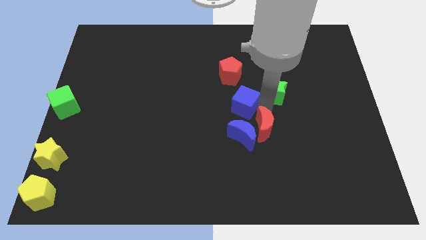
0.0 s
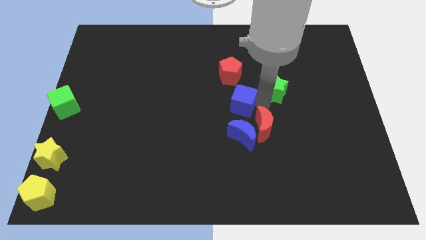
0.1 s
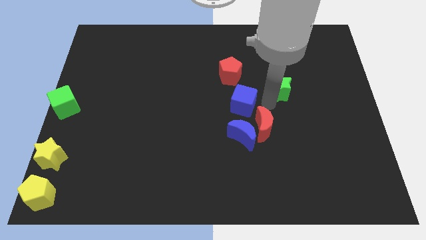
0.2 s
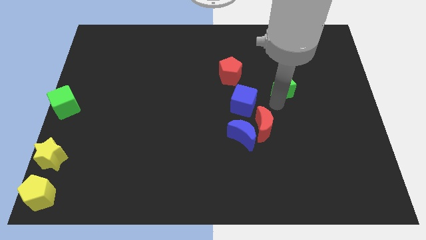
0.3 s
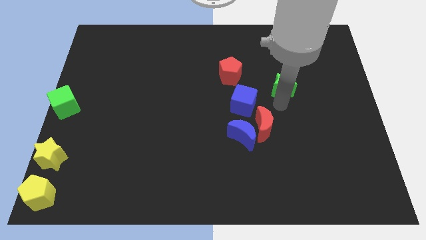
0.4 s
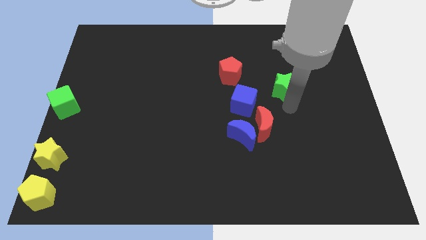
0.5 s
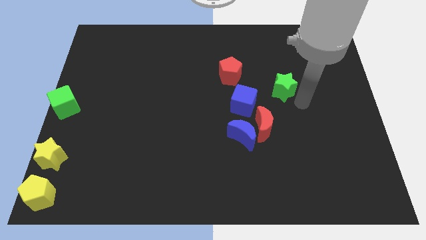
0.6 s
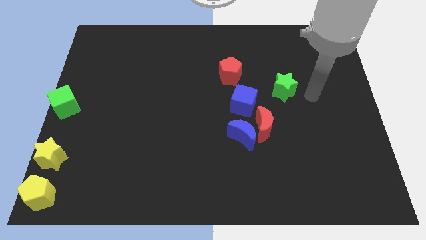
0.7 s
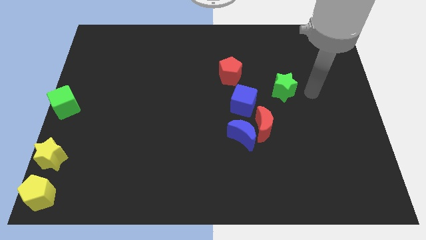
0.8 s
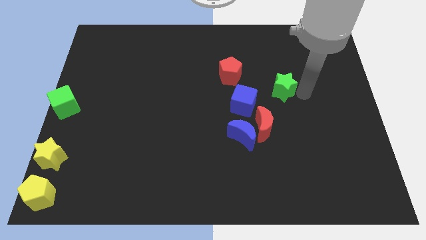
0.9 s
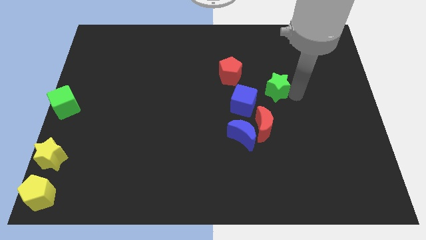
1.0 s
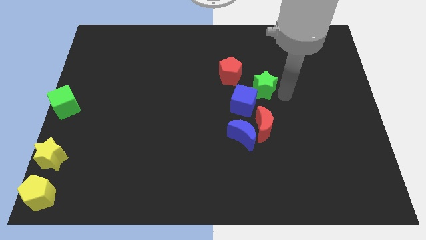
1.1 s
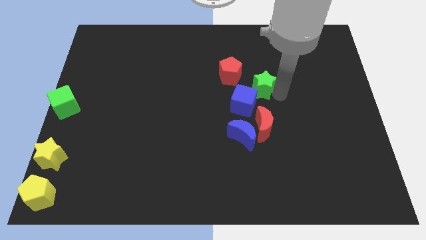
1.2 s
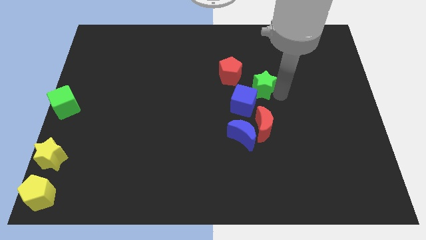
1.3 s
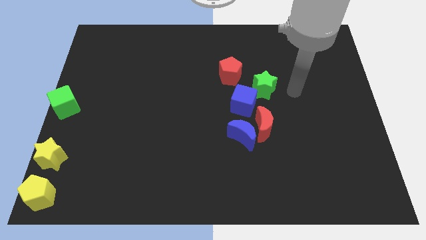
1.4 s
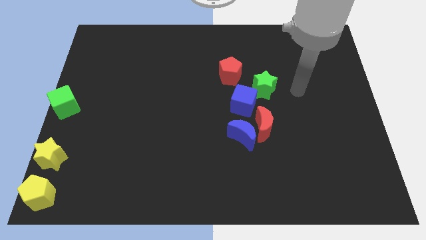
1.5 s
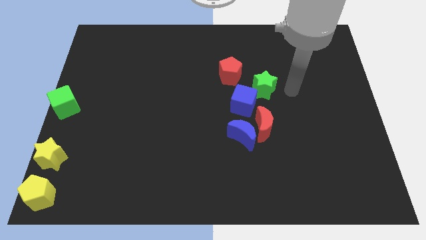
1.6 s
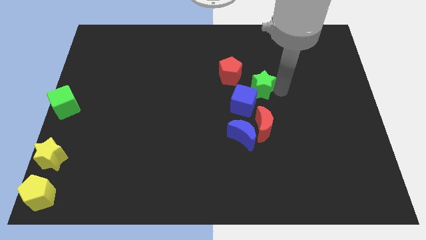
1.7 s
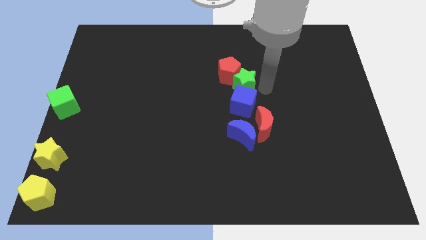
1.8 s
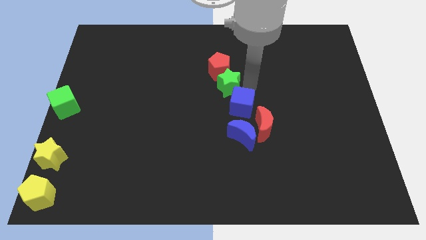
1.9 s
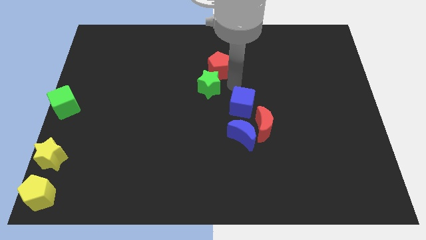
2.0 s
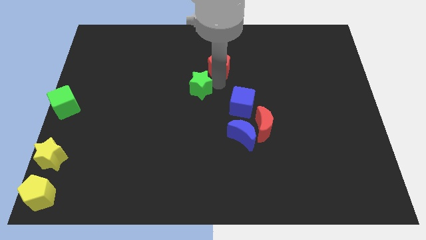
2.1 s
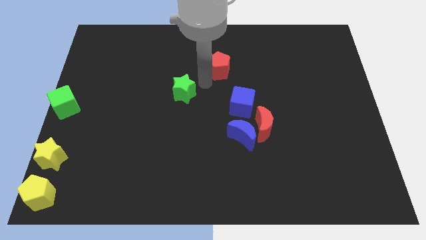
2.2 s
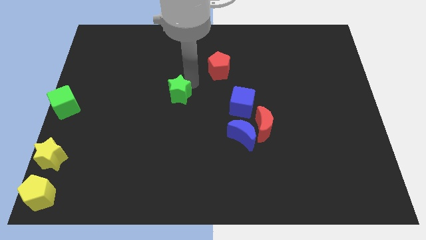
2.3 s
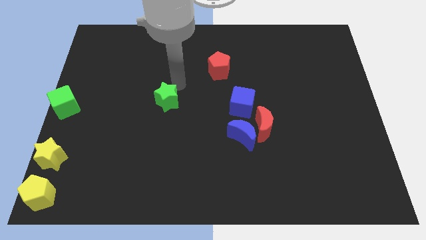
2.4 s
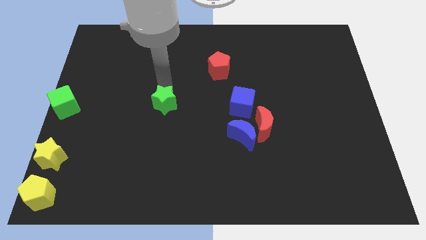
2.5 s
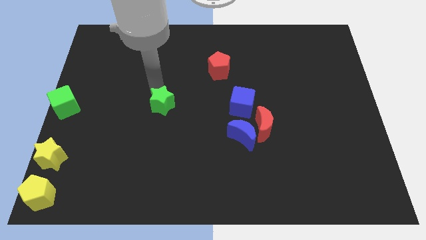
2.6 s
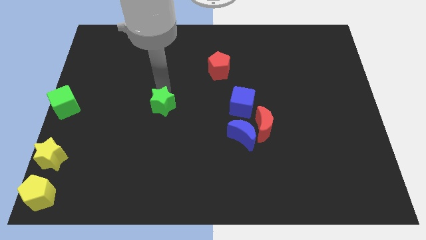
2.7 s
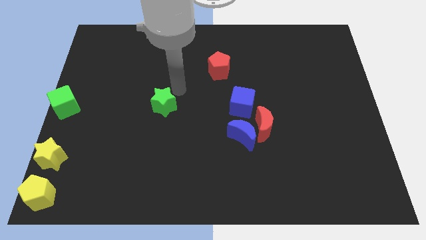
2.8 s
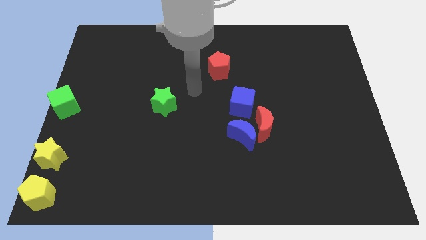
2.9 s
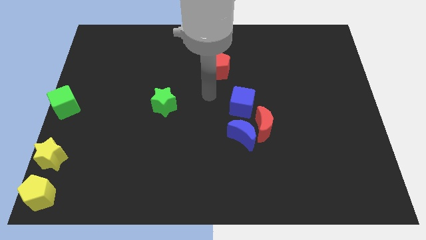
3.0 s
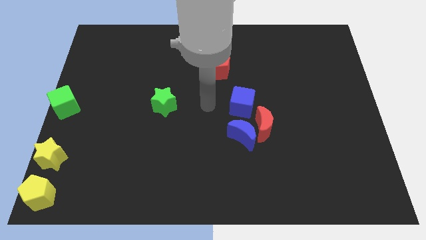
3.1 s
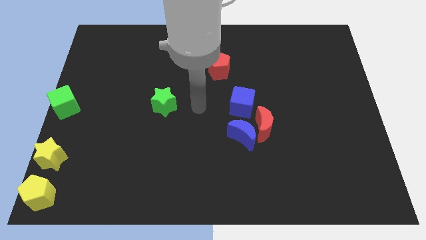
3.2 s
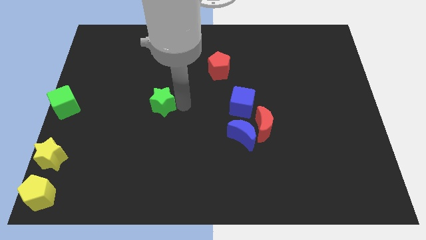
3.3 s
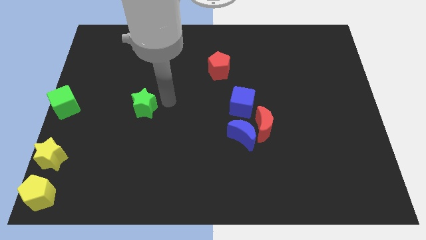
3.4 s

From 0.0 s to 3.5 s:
place the green star between blue cube and green cube

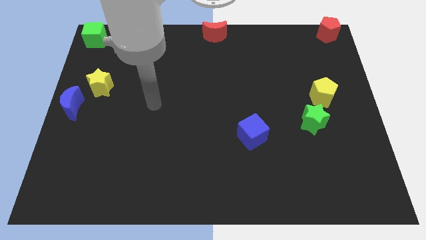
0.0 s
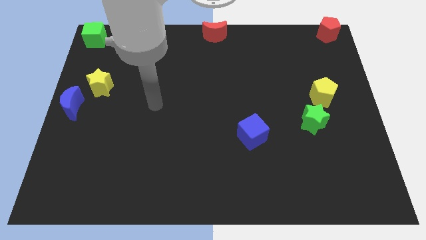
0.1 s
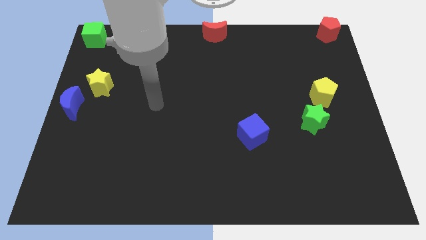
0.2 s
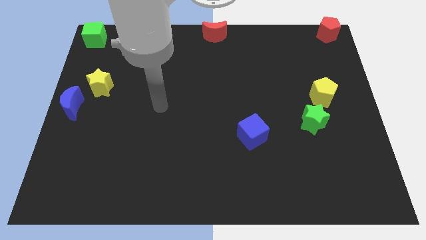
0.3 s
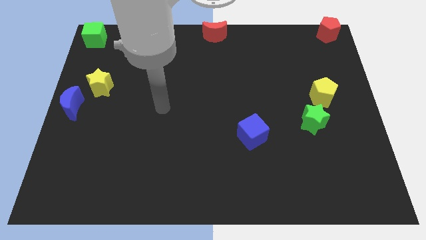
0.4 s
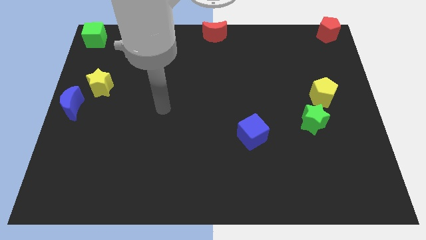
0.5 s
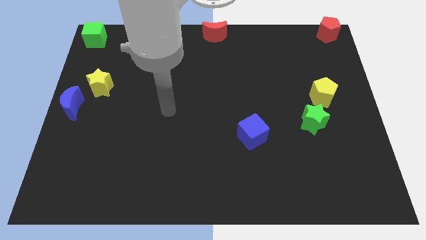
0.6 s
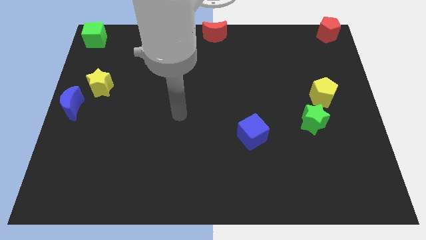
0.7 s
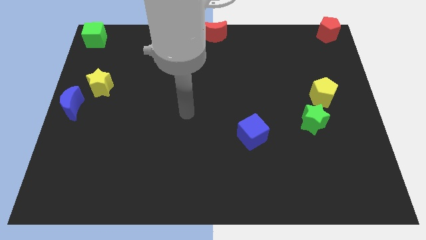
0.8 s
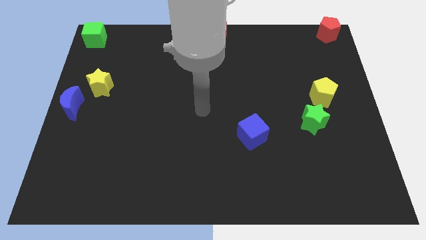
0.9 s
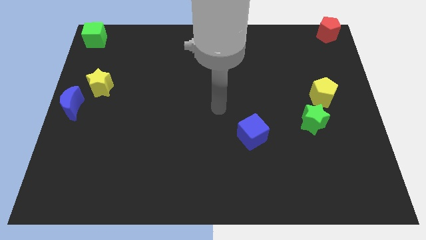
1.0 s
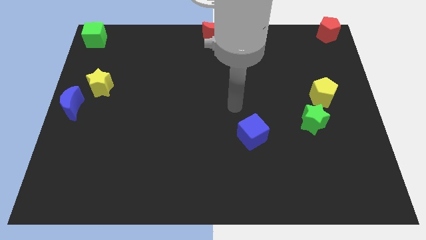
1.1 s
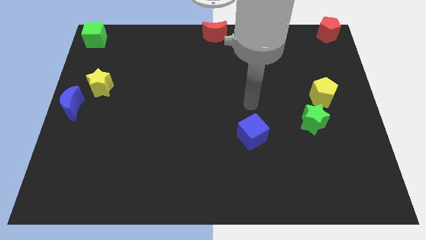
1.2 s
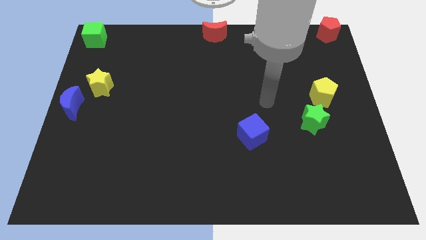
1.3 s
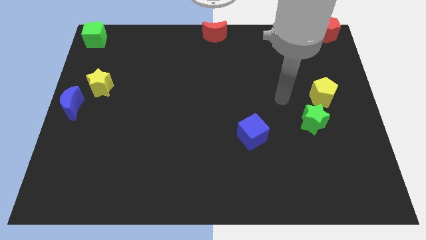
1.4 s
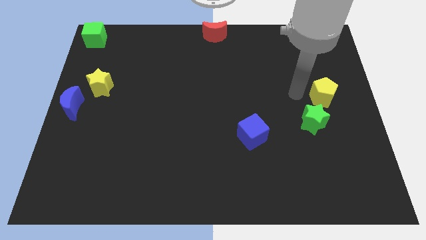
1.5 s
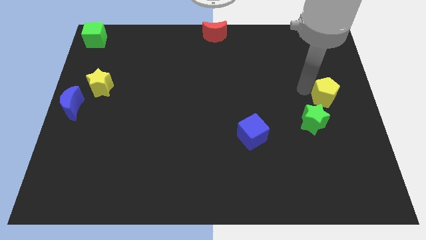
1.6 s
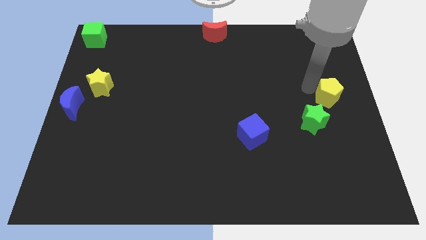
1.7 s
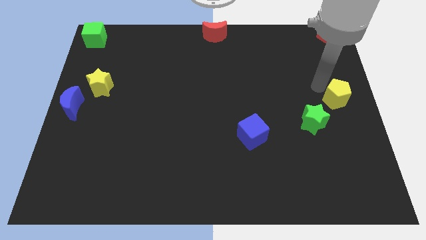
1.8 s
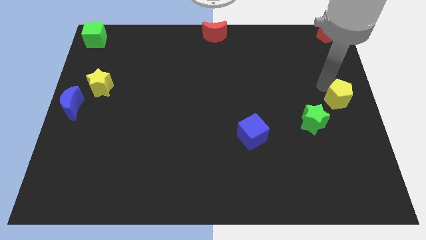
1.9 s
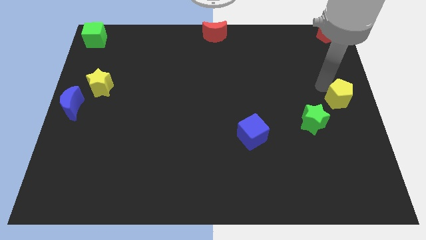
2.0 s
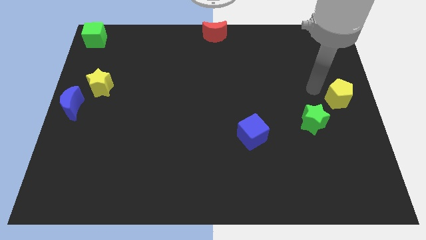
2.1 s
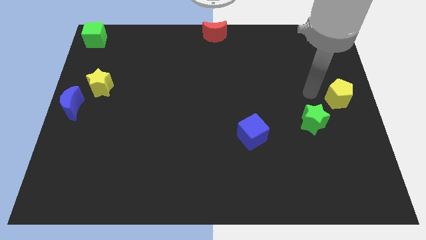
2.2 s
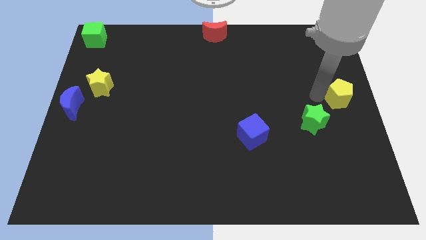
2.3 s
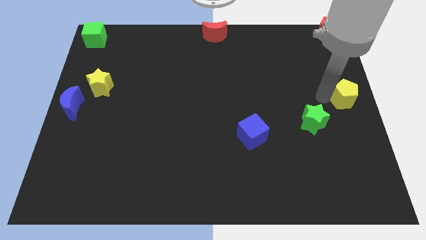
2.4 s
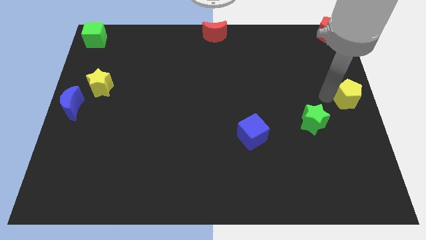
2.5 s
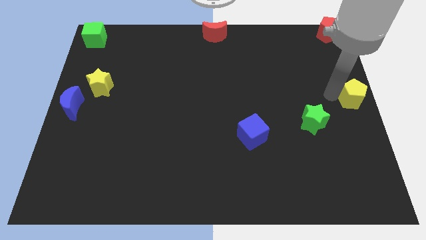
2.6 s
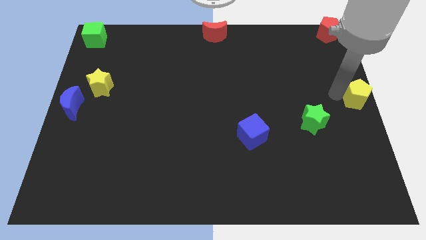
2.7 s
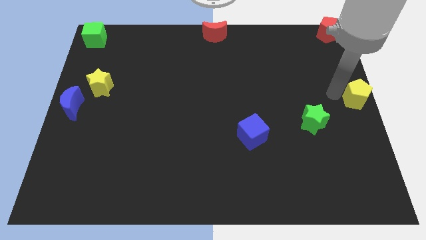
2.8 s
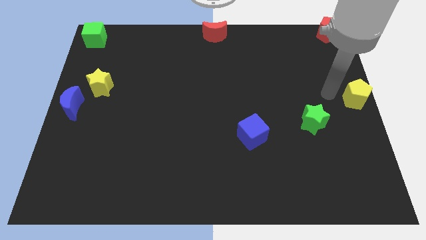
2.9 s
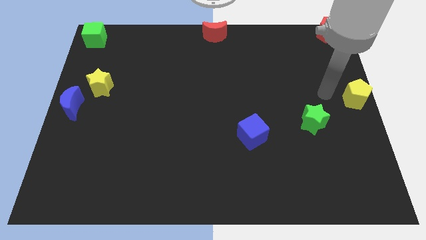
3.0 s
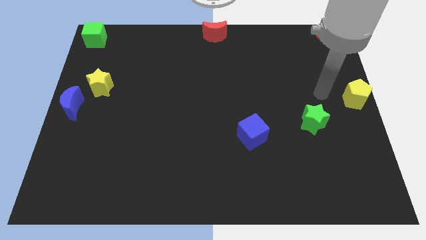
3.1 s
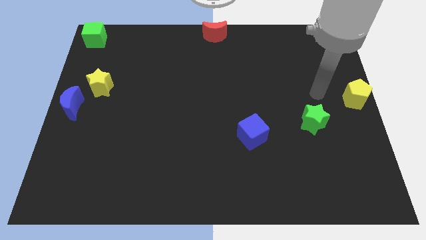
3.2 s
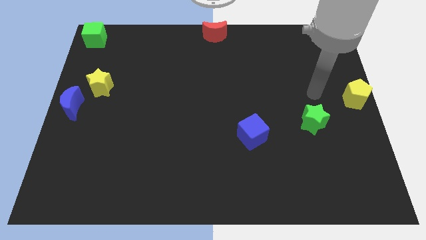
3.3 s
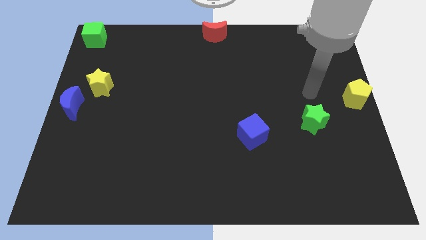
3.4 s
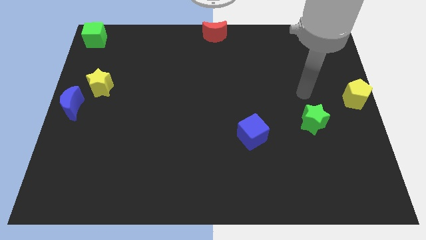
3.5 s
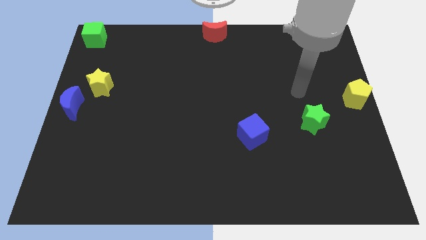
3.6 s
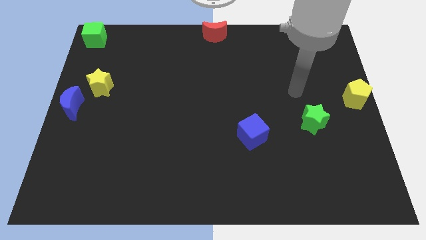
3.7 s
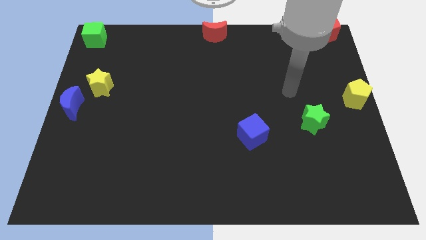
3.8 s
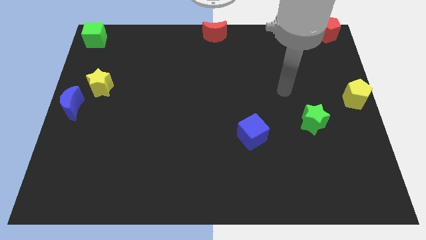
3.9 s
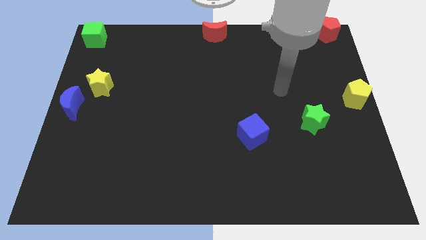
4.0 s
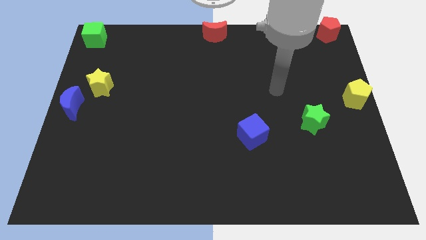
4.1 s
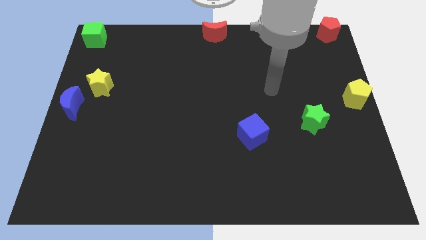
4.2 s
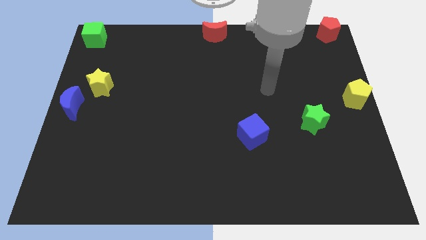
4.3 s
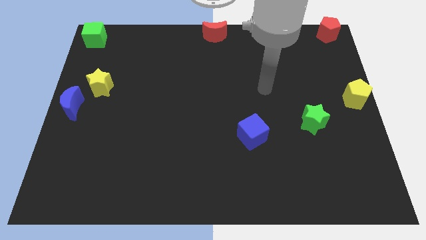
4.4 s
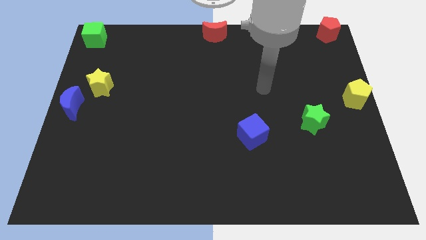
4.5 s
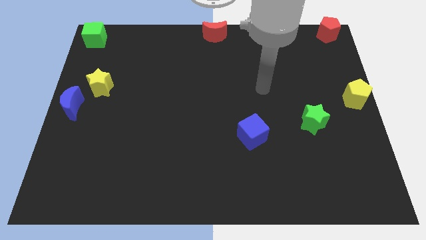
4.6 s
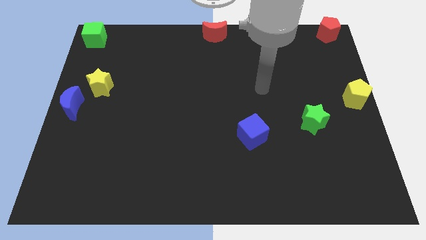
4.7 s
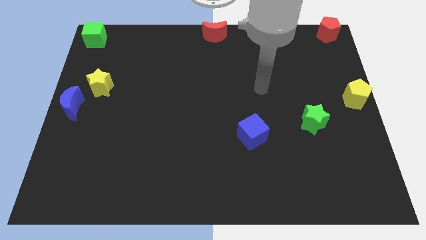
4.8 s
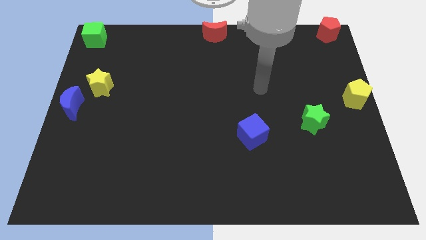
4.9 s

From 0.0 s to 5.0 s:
move the yellow pentagon to the center right

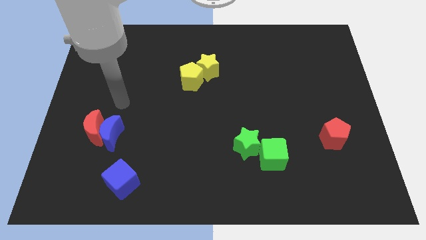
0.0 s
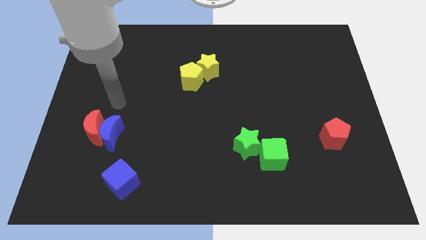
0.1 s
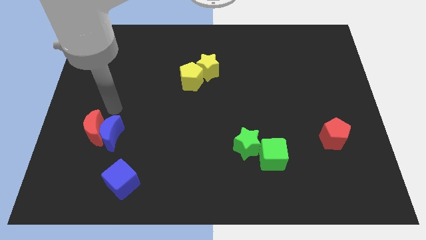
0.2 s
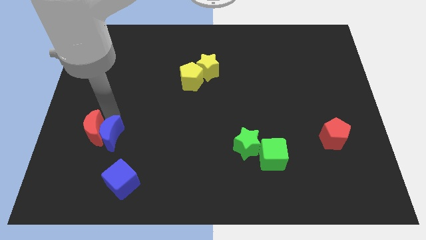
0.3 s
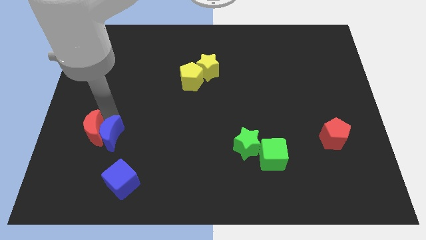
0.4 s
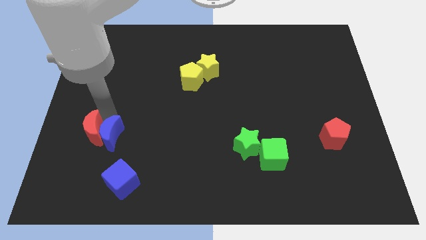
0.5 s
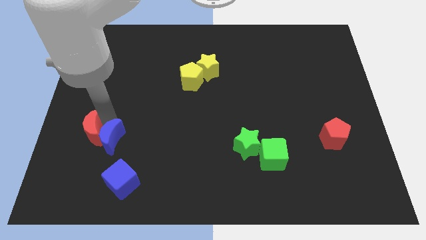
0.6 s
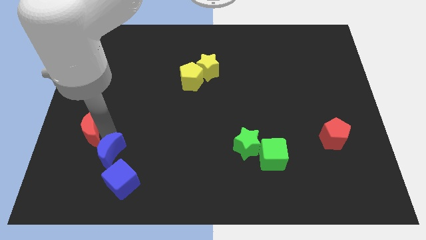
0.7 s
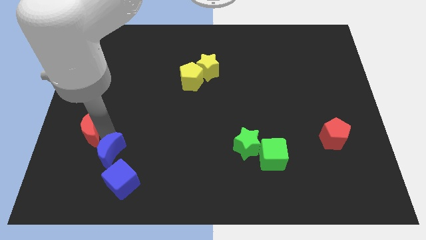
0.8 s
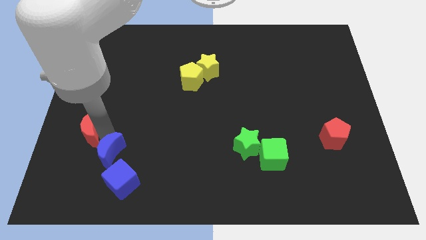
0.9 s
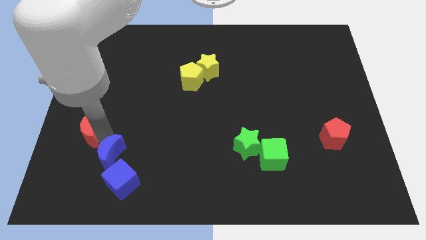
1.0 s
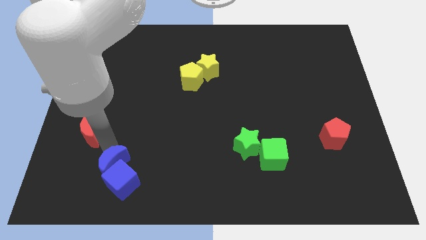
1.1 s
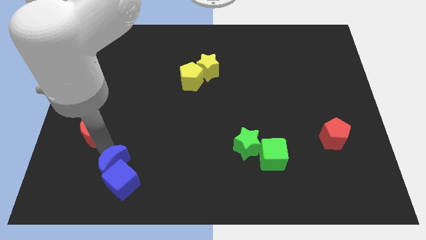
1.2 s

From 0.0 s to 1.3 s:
separate the blue moon from the red moon
